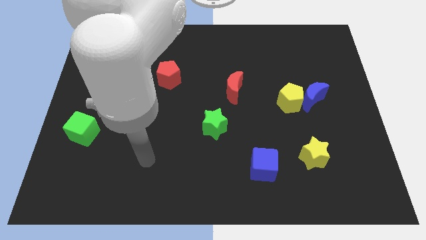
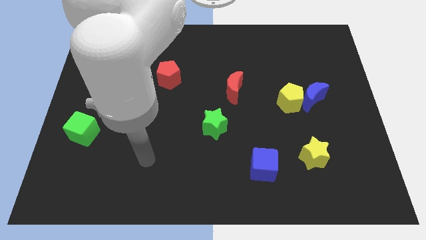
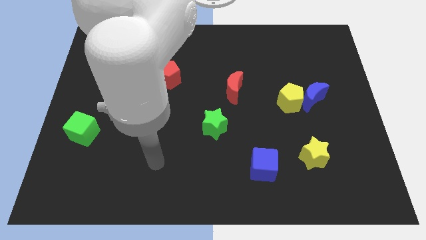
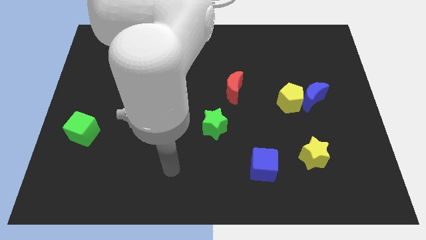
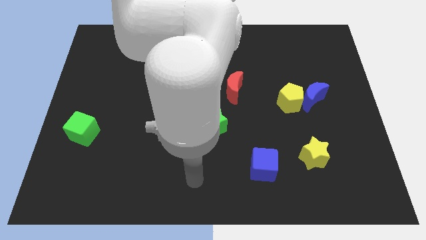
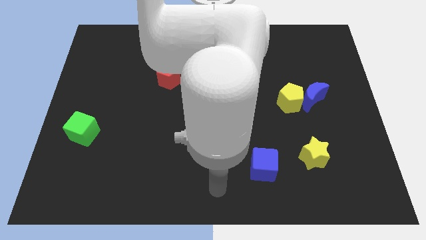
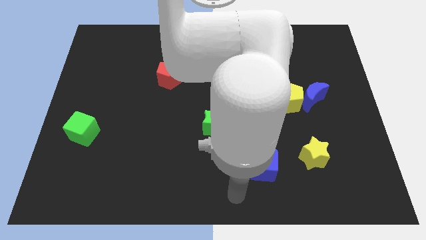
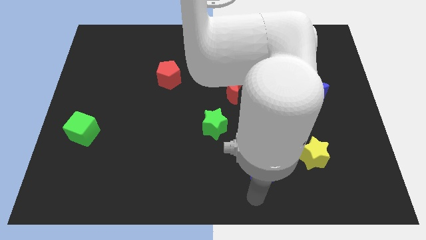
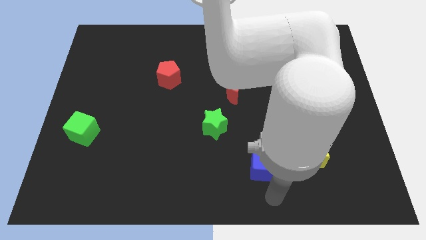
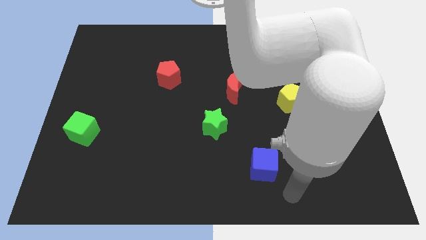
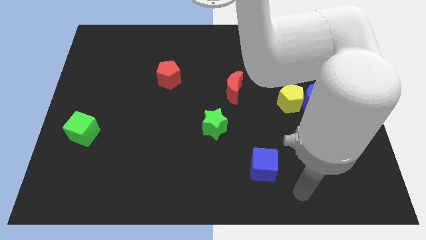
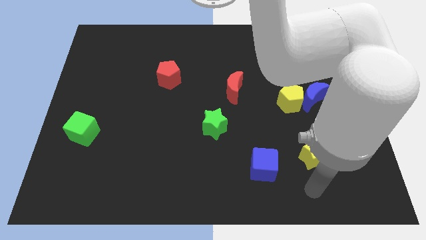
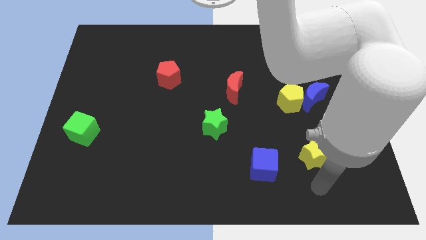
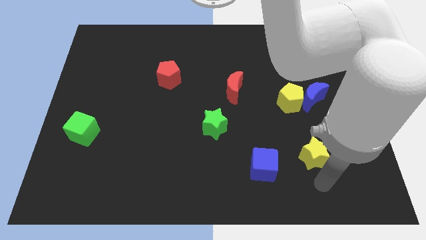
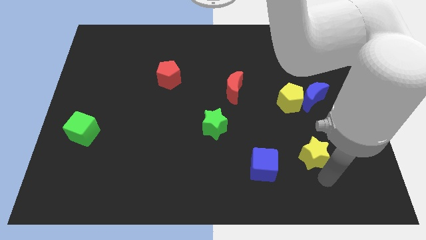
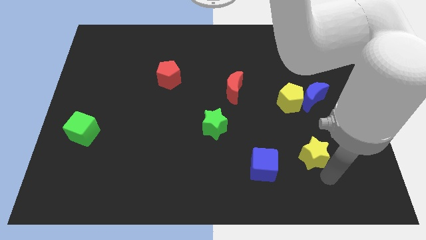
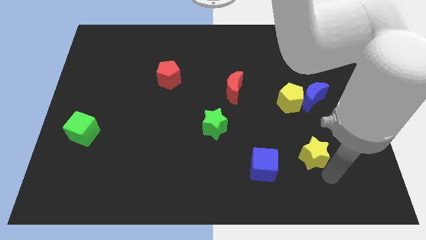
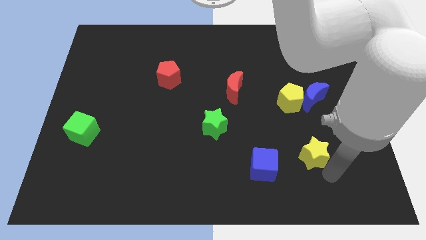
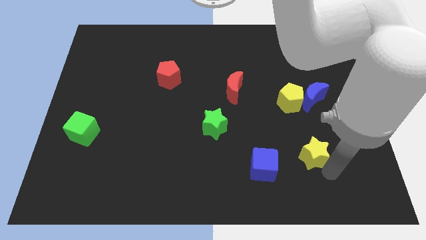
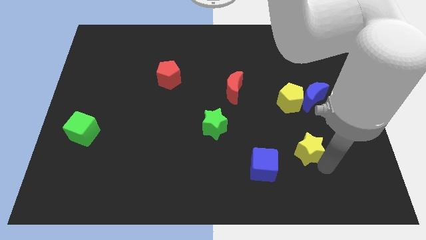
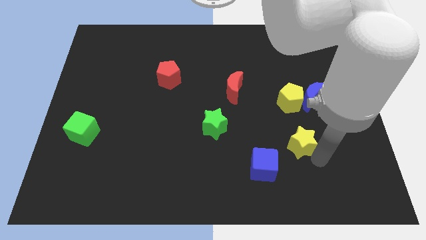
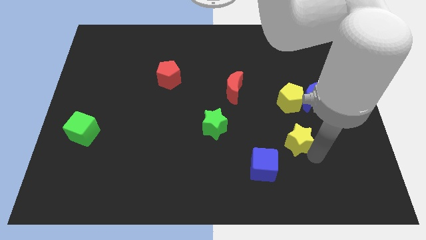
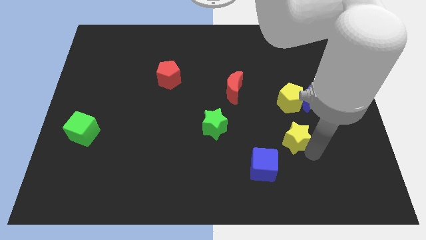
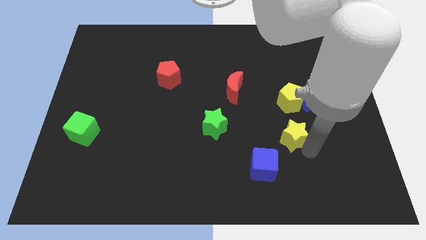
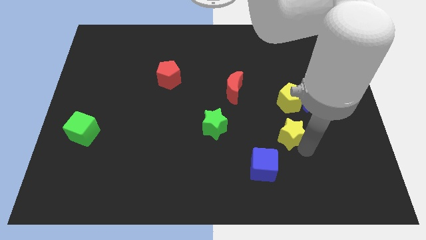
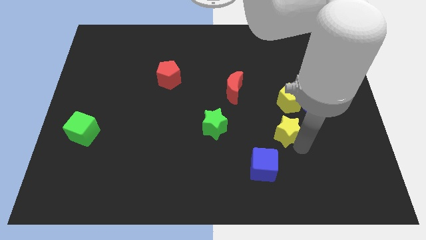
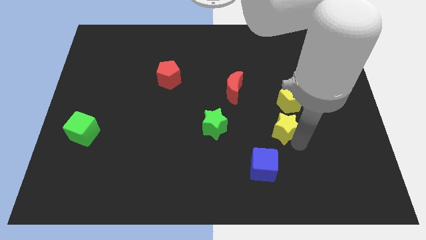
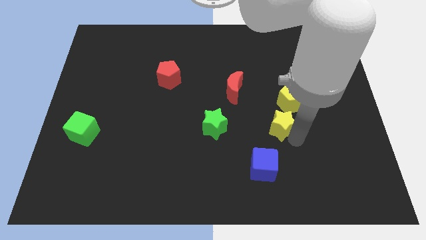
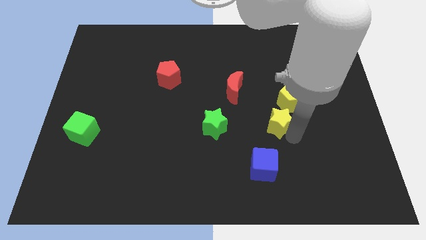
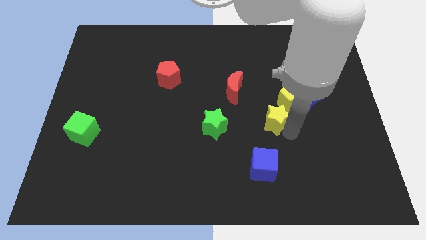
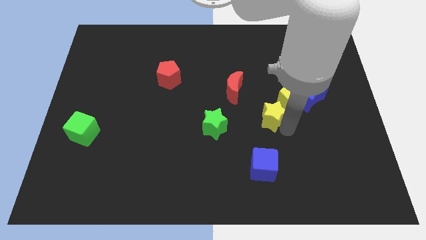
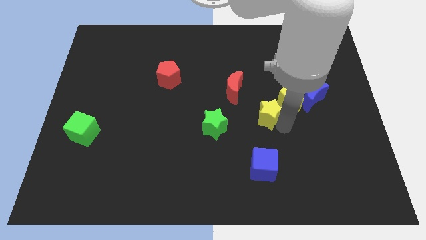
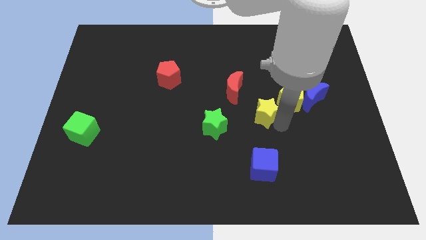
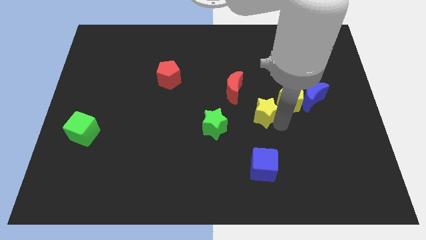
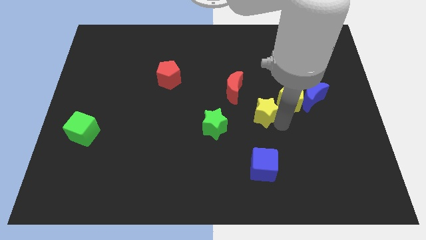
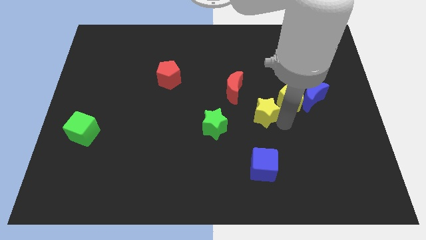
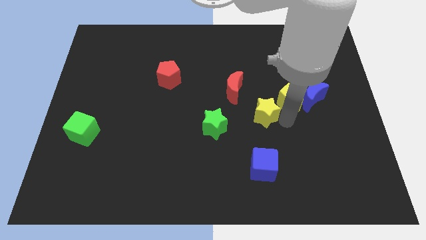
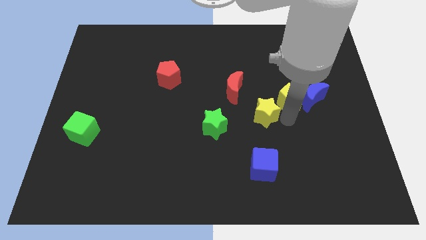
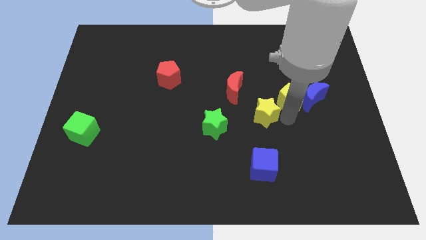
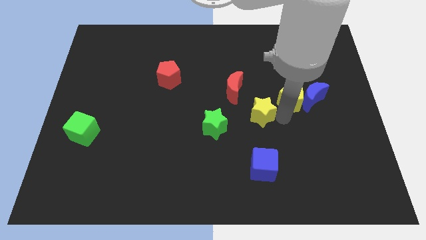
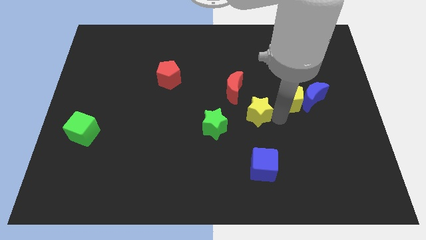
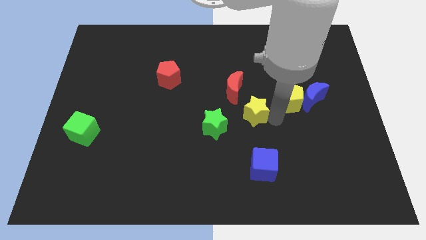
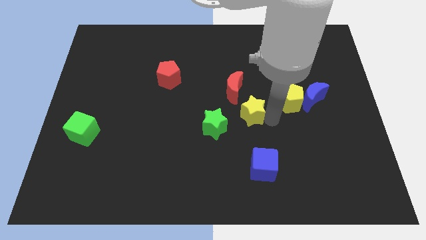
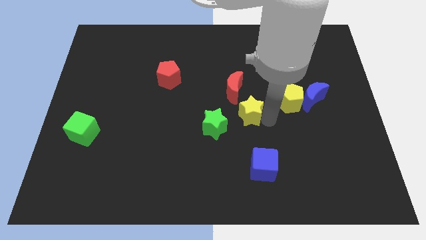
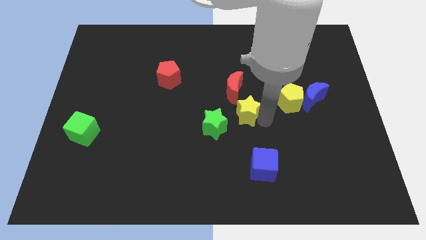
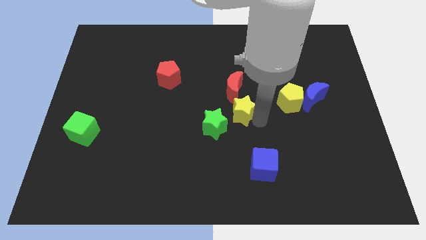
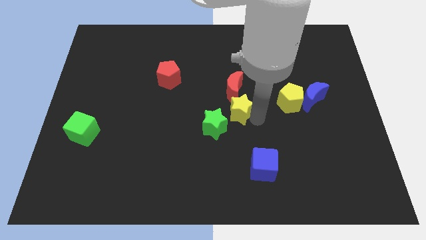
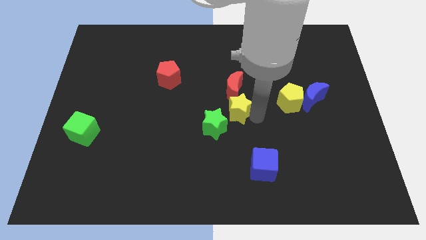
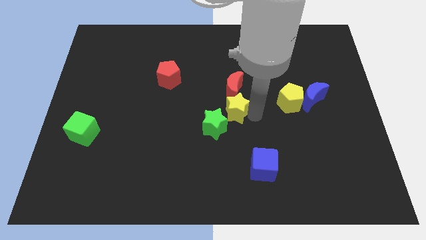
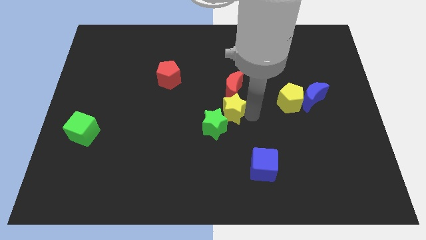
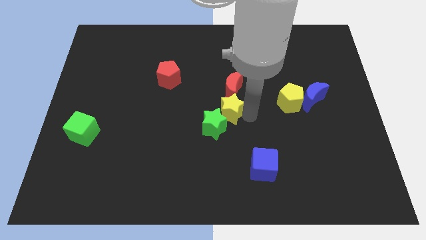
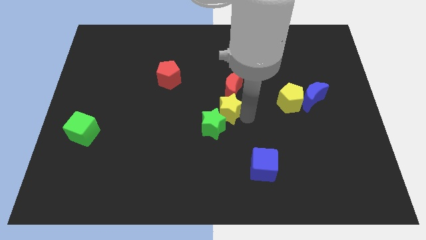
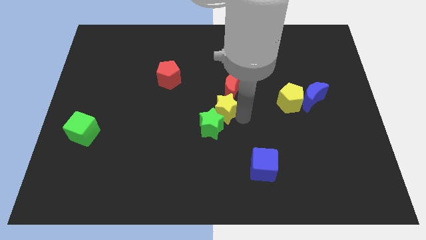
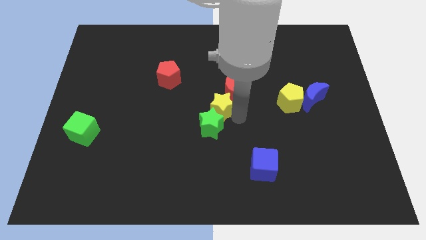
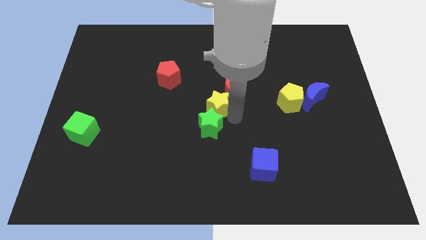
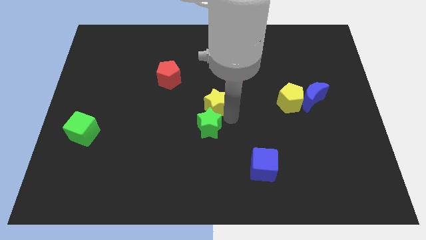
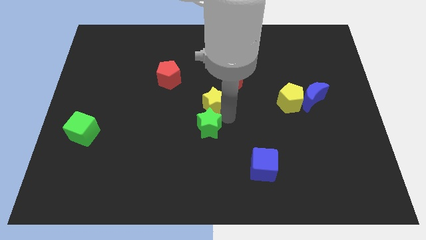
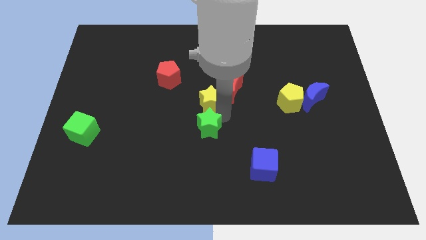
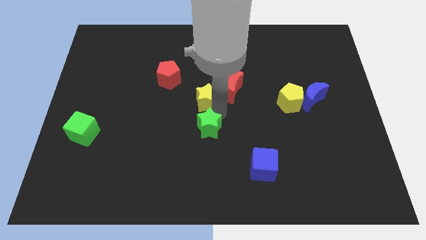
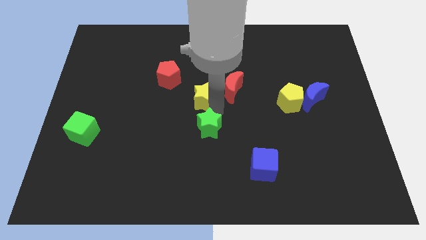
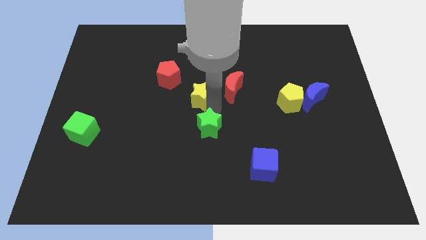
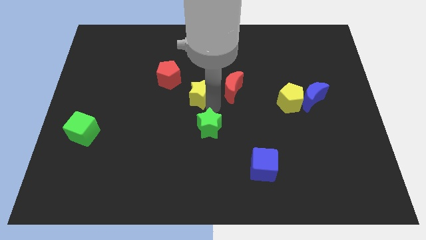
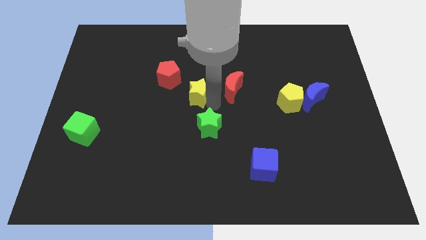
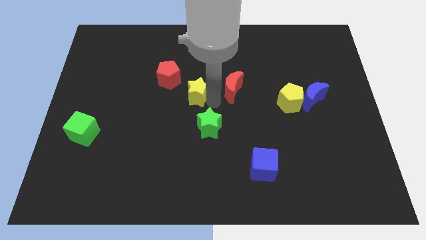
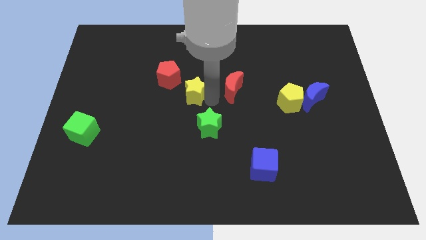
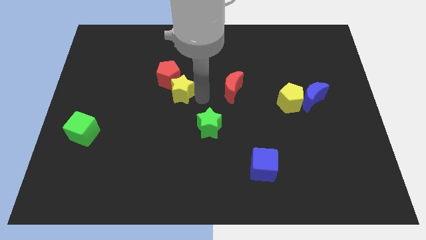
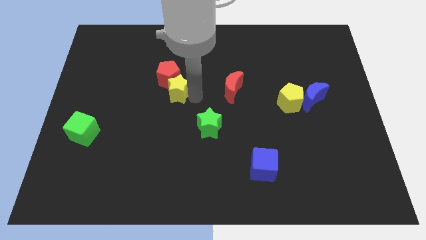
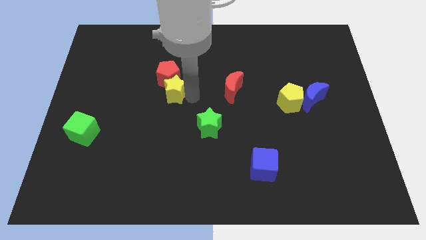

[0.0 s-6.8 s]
push the yellow star towards the red pentagon

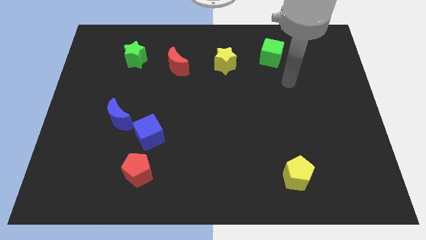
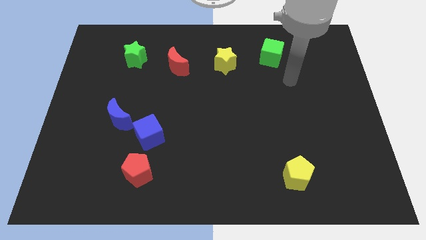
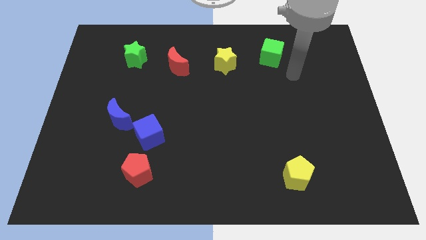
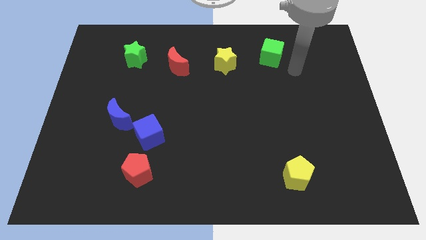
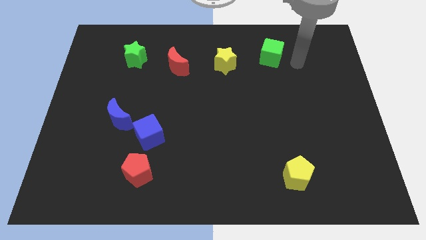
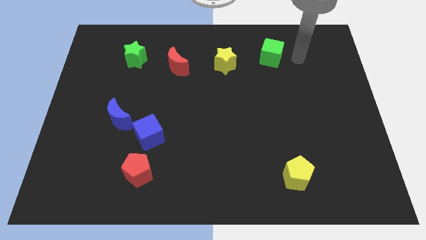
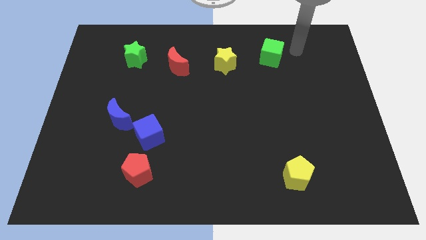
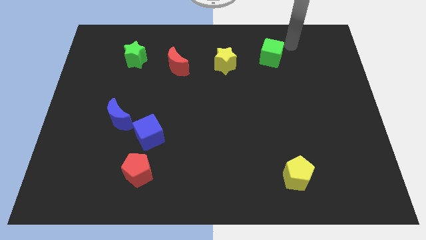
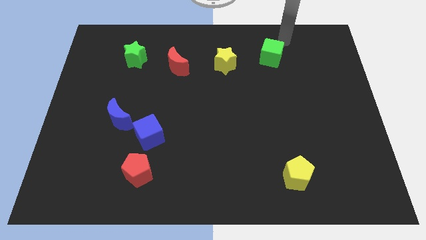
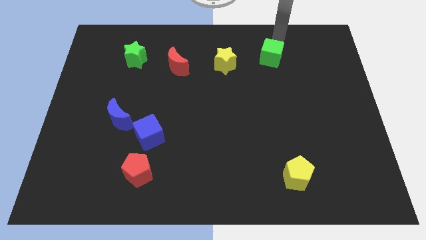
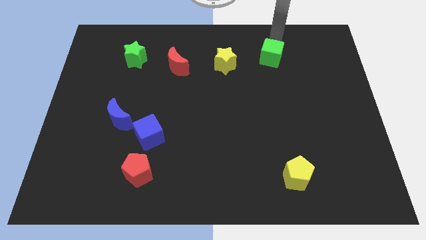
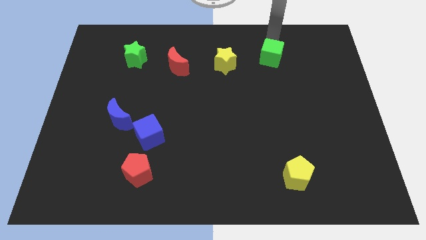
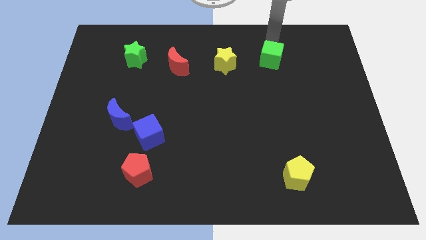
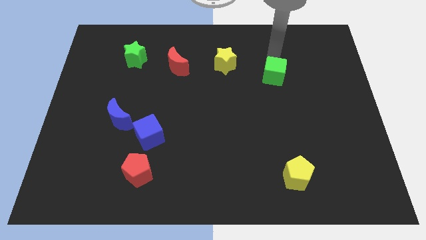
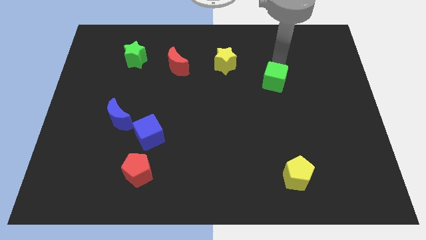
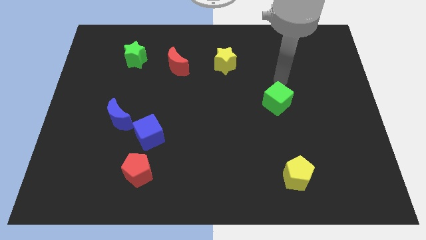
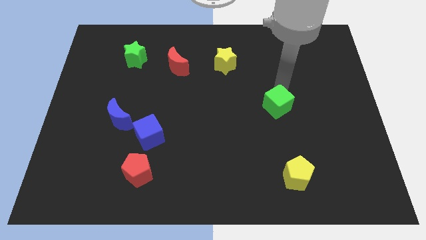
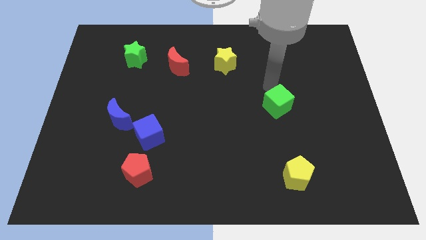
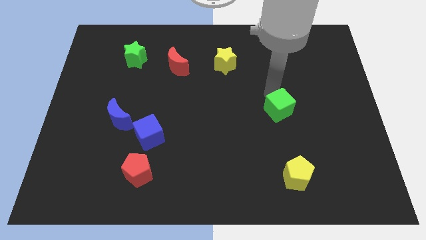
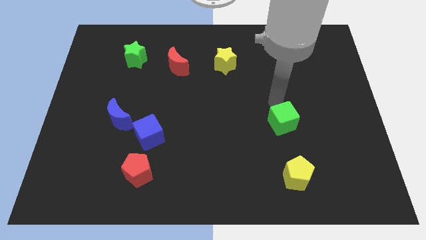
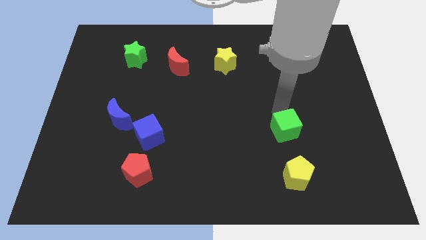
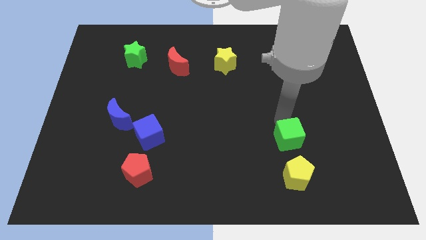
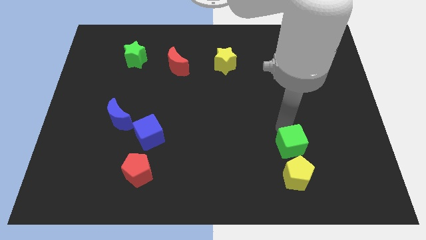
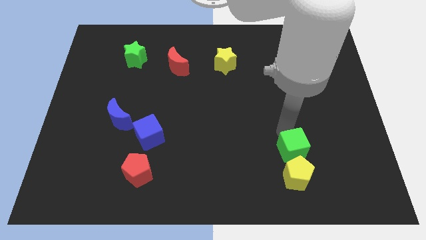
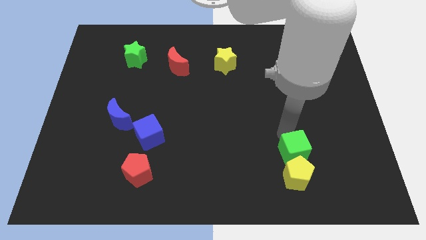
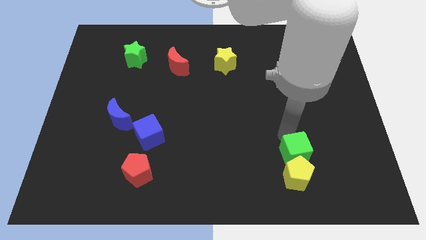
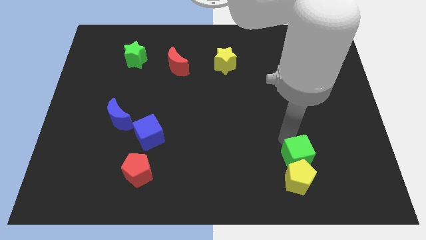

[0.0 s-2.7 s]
put the green cube towards the yellow pentagon
